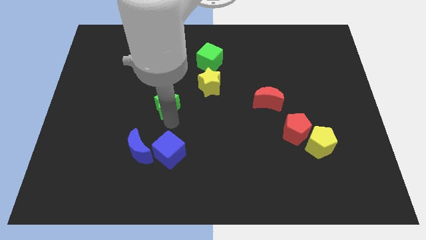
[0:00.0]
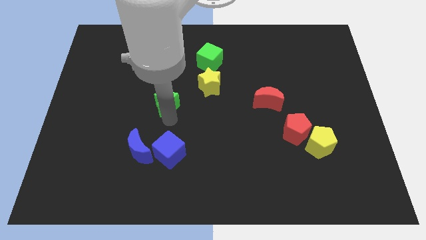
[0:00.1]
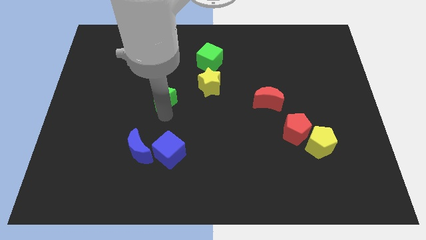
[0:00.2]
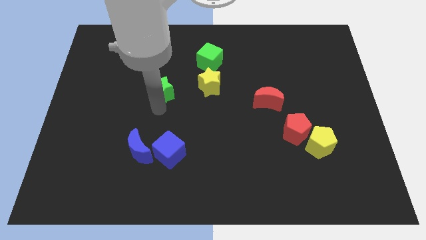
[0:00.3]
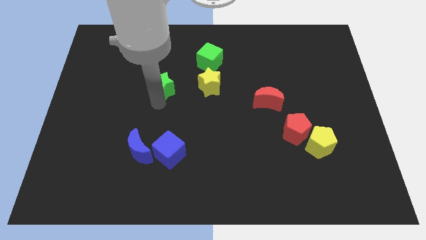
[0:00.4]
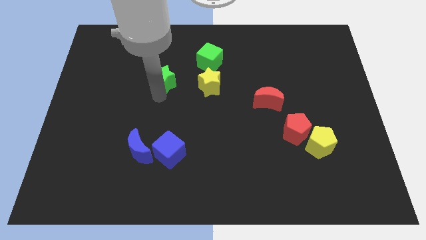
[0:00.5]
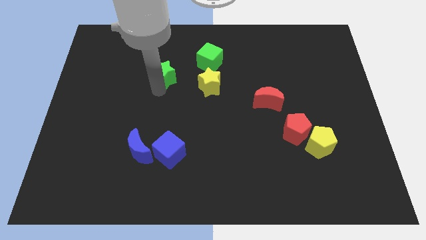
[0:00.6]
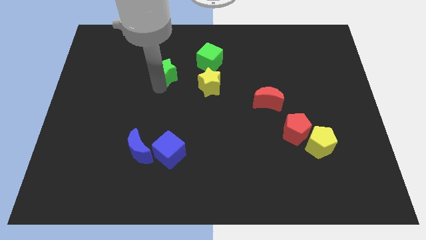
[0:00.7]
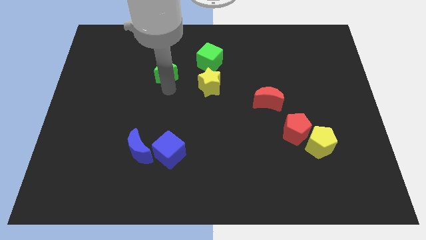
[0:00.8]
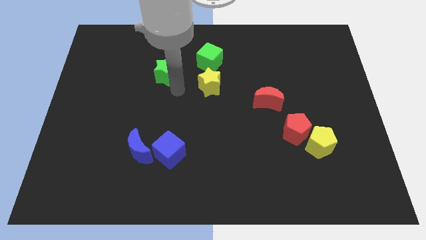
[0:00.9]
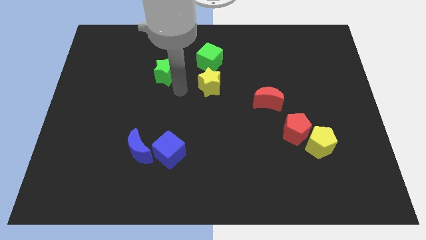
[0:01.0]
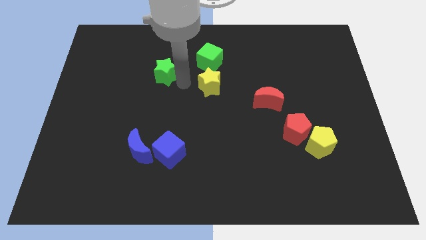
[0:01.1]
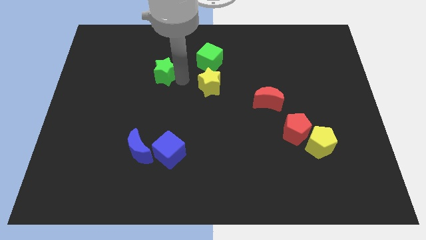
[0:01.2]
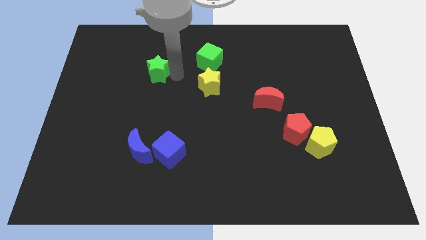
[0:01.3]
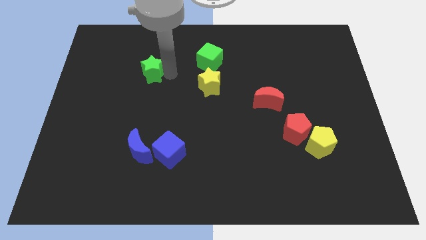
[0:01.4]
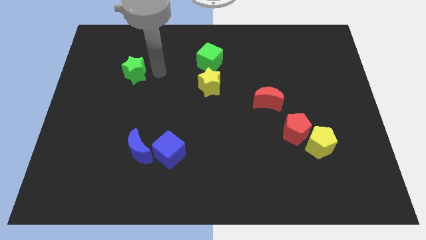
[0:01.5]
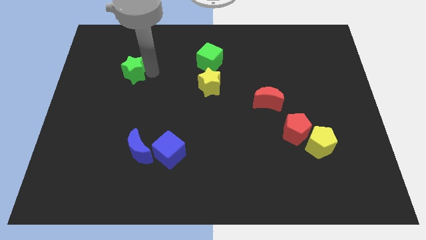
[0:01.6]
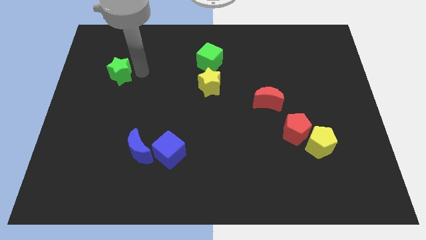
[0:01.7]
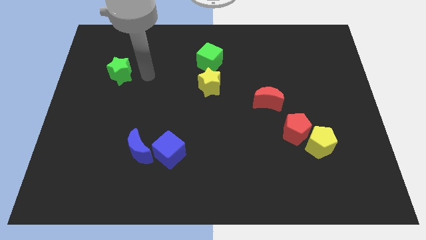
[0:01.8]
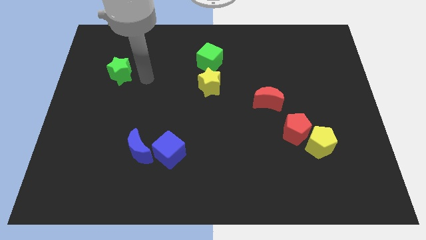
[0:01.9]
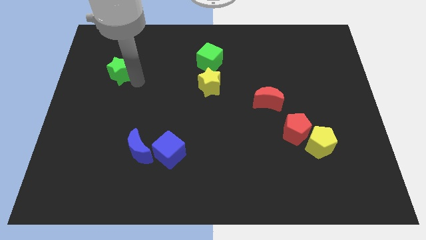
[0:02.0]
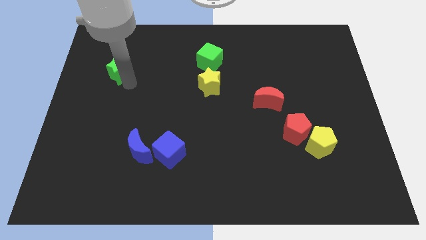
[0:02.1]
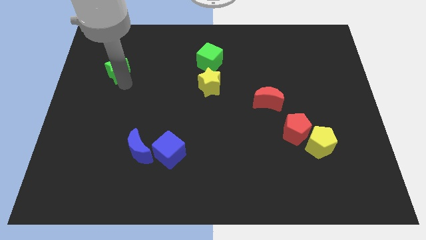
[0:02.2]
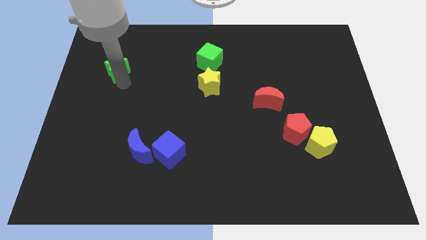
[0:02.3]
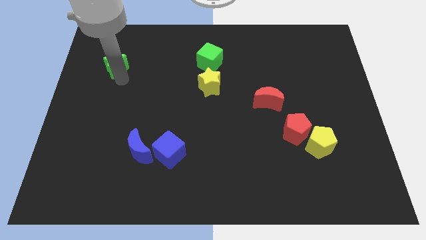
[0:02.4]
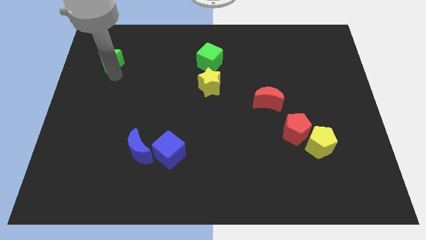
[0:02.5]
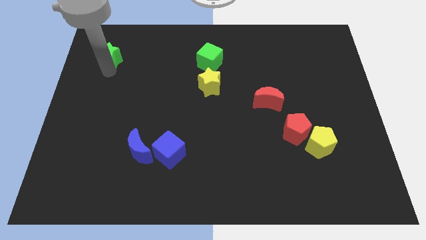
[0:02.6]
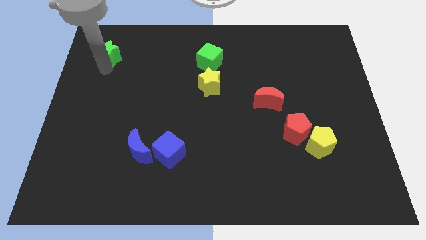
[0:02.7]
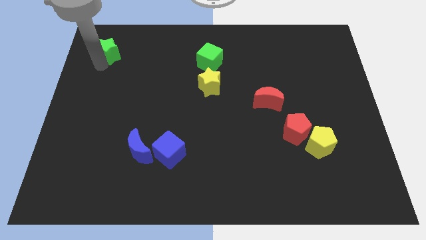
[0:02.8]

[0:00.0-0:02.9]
place the green star above the blue moon

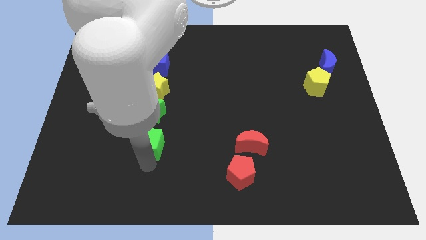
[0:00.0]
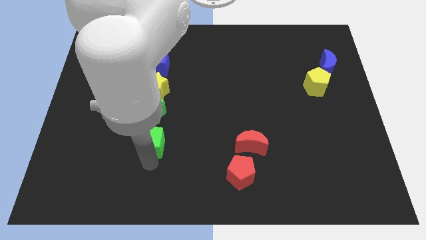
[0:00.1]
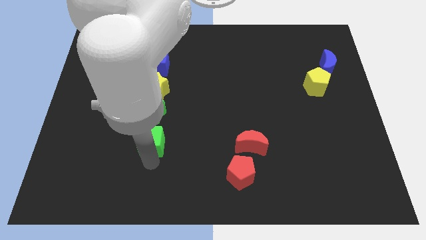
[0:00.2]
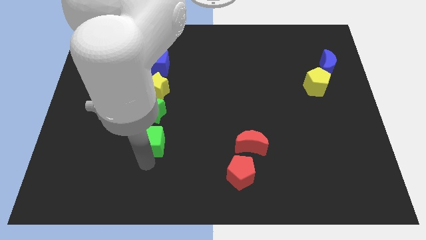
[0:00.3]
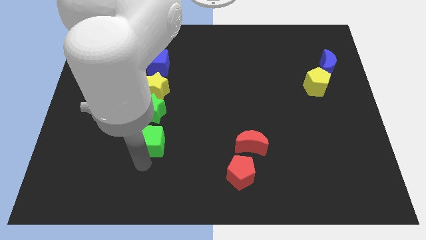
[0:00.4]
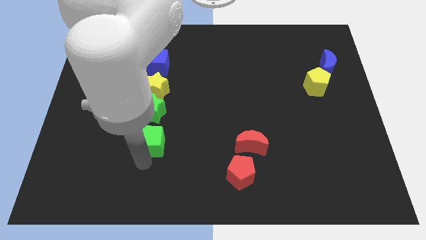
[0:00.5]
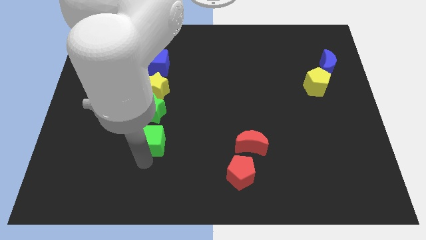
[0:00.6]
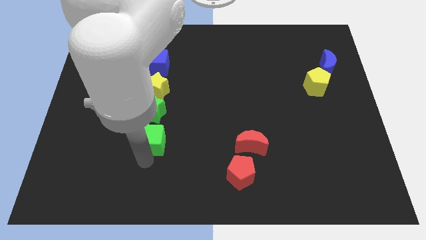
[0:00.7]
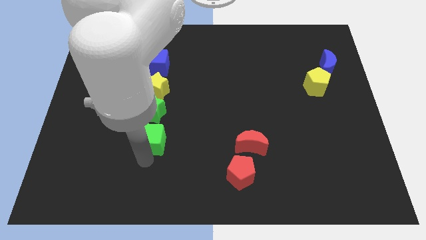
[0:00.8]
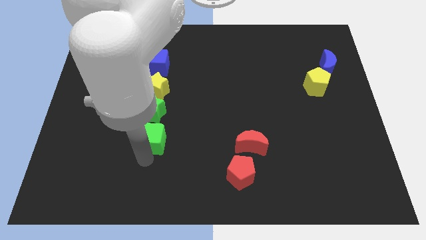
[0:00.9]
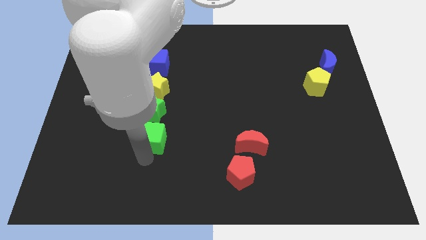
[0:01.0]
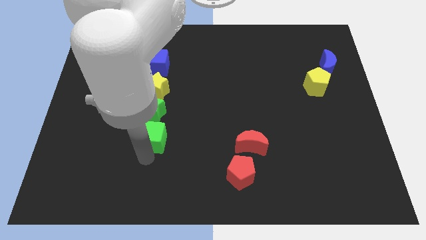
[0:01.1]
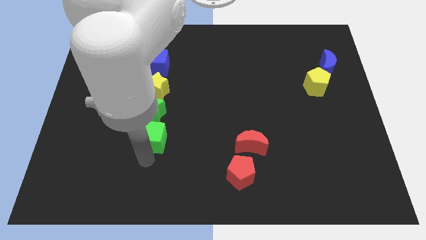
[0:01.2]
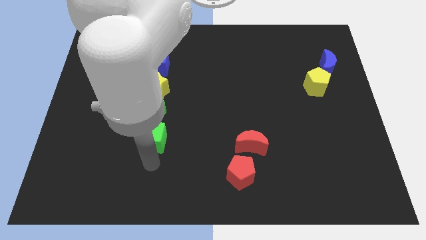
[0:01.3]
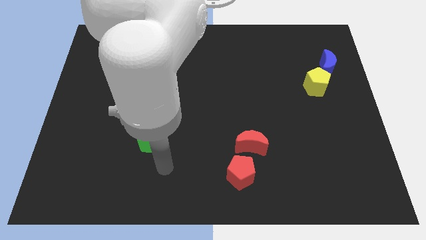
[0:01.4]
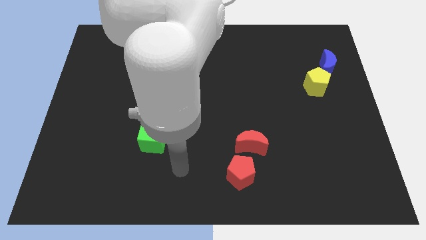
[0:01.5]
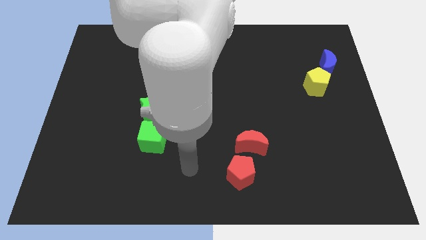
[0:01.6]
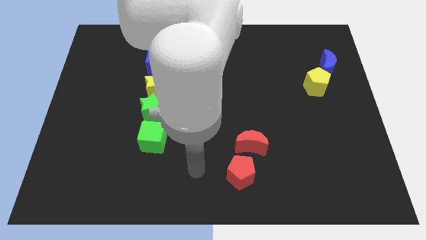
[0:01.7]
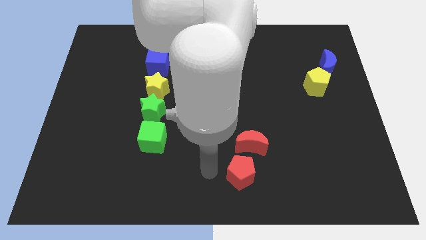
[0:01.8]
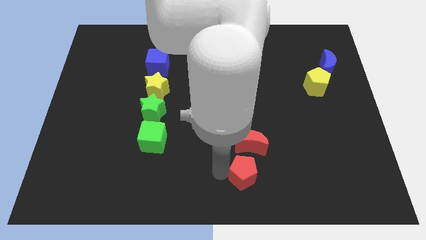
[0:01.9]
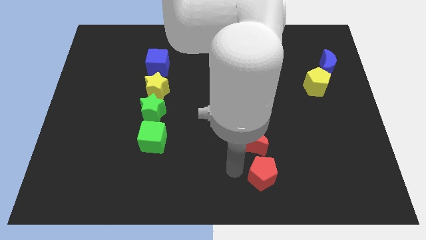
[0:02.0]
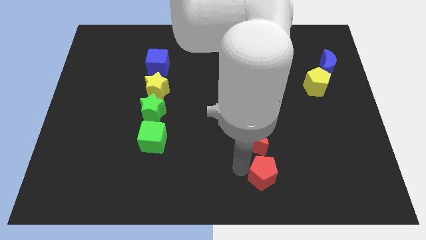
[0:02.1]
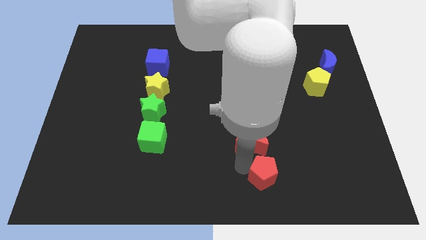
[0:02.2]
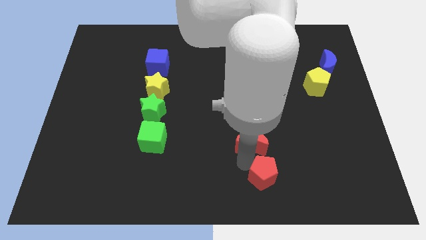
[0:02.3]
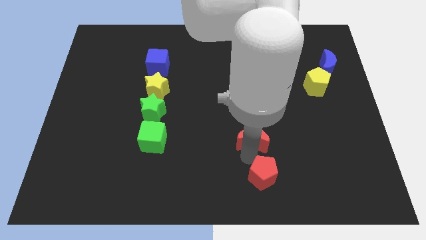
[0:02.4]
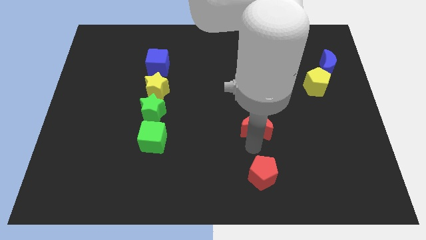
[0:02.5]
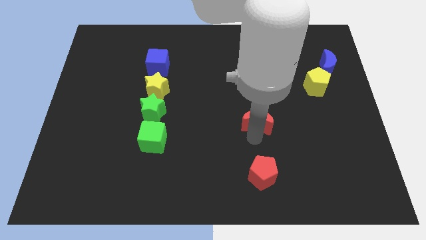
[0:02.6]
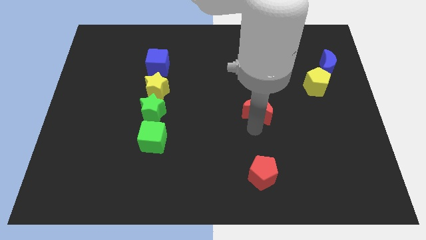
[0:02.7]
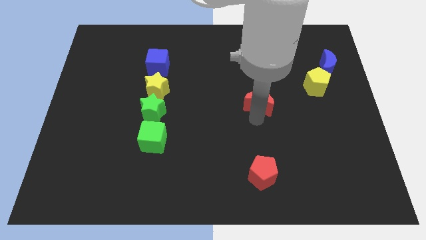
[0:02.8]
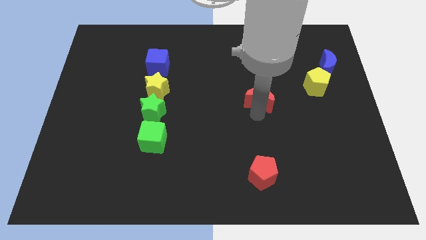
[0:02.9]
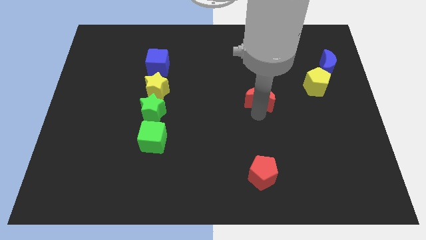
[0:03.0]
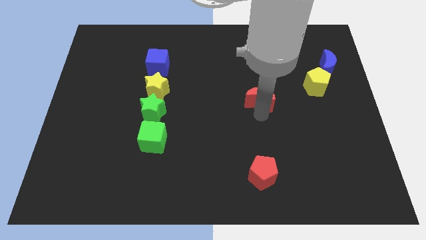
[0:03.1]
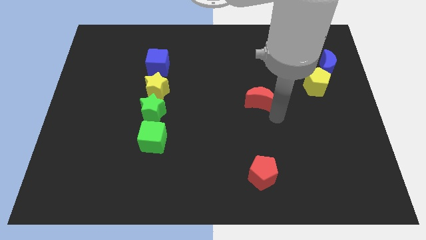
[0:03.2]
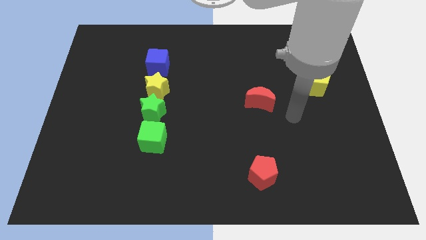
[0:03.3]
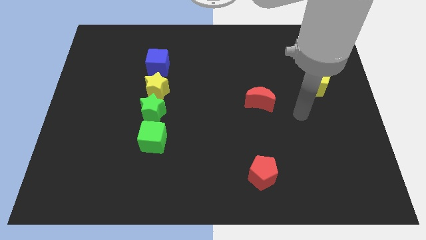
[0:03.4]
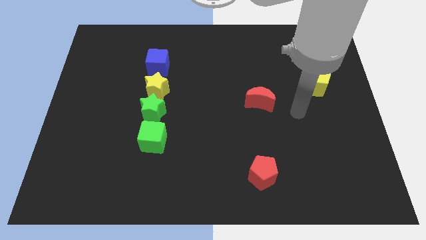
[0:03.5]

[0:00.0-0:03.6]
place the red crescent diagonal to the green star

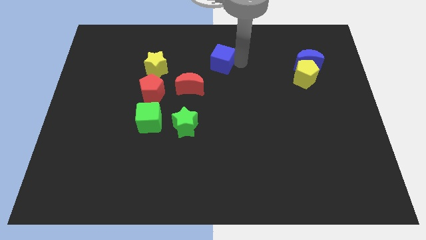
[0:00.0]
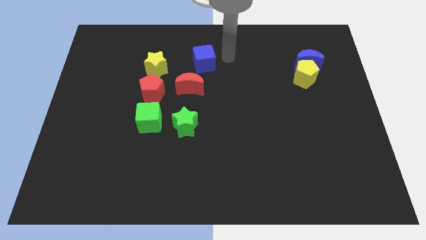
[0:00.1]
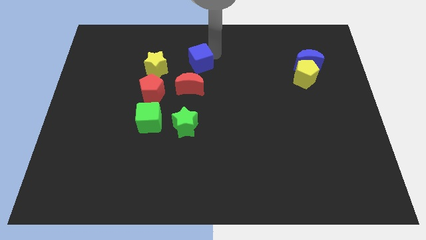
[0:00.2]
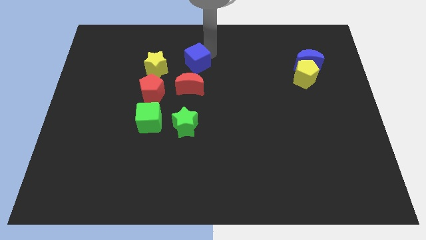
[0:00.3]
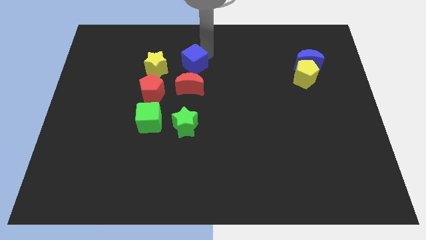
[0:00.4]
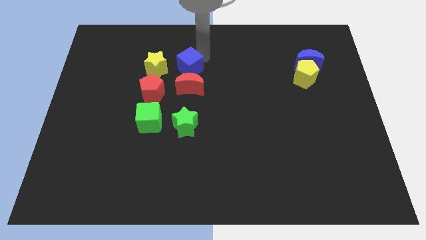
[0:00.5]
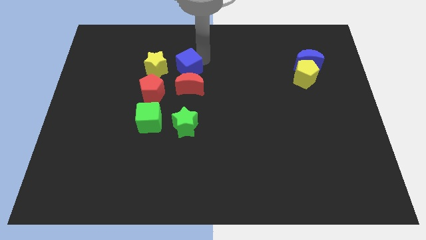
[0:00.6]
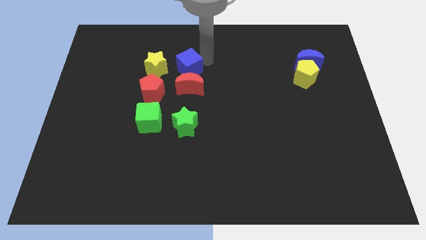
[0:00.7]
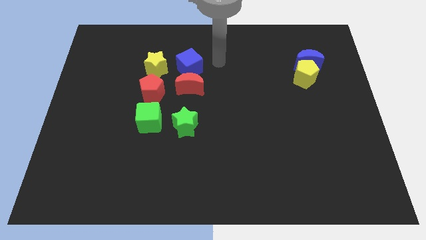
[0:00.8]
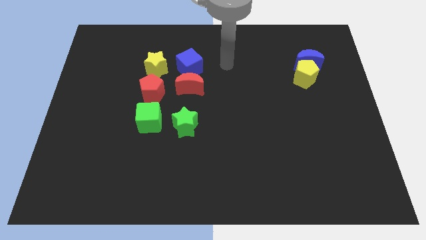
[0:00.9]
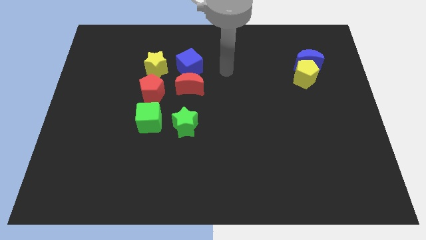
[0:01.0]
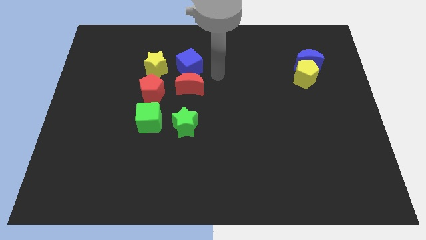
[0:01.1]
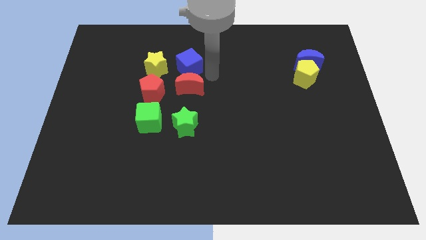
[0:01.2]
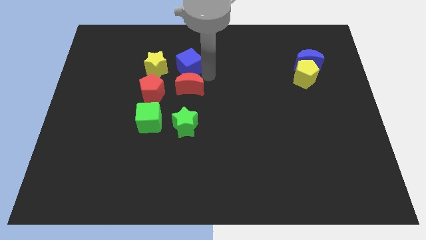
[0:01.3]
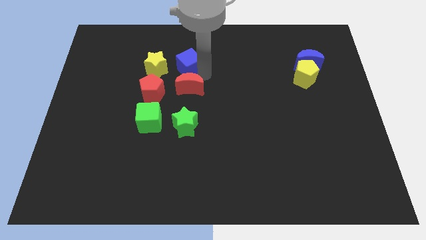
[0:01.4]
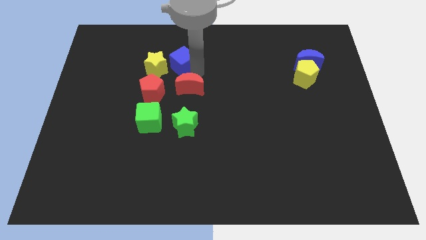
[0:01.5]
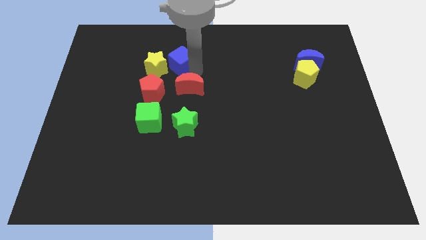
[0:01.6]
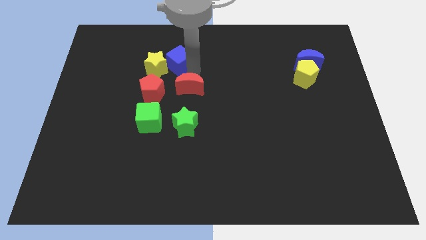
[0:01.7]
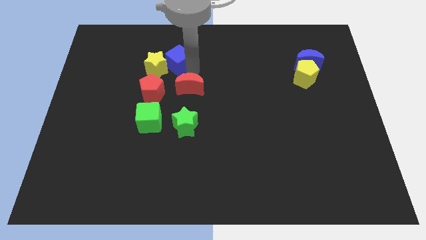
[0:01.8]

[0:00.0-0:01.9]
slide the blue cube into the yellow star

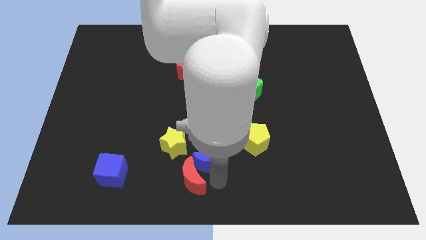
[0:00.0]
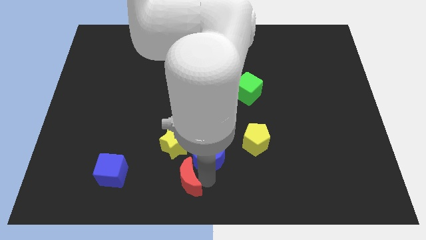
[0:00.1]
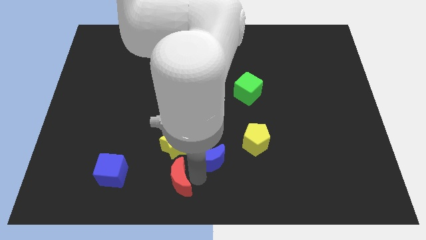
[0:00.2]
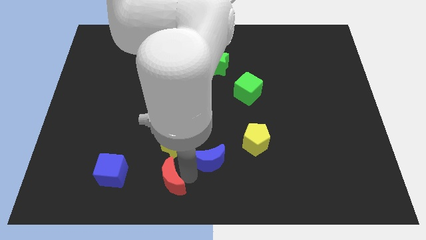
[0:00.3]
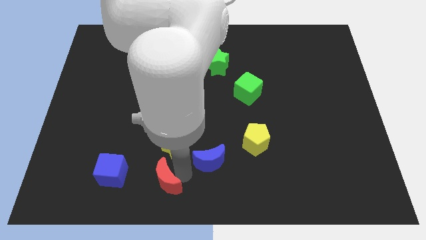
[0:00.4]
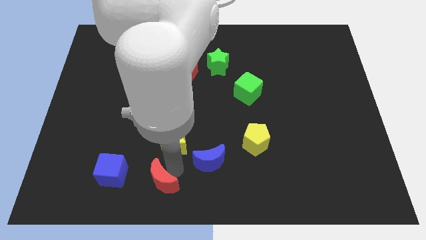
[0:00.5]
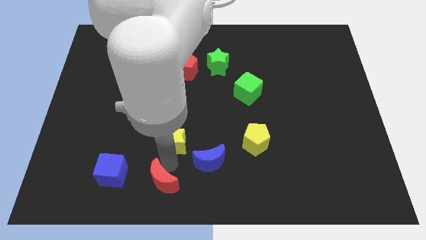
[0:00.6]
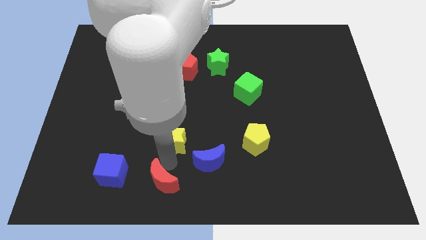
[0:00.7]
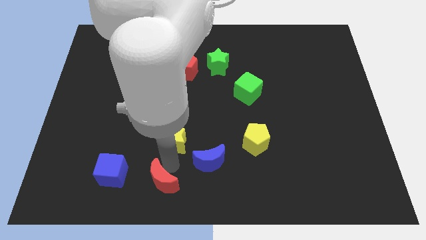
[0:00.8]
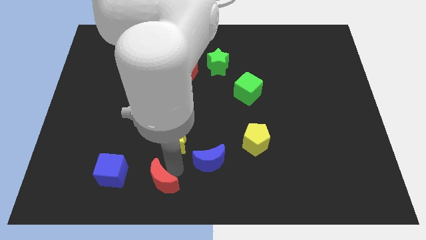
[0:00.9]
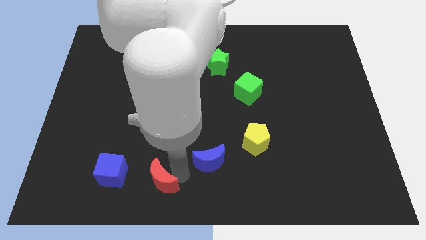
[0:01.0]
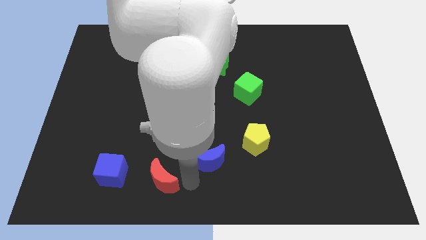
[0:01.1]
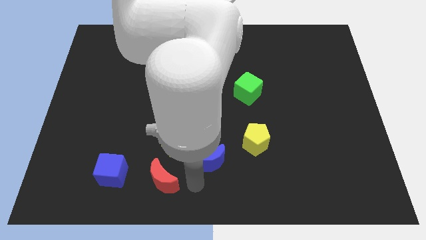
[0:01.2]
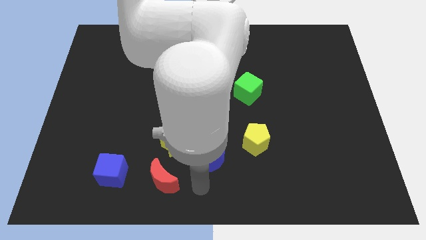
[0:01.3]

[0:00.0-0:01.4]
separate the red moon and blue moon
